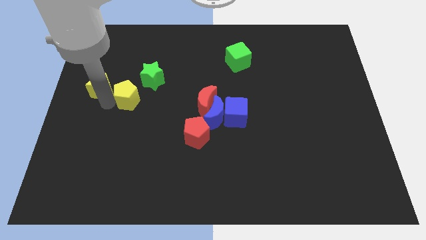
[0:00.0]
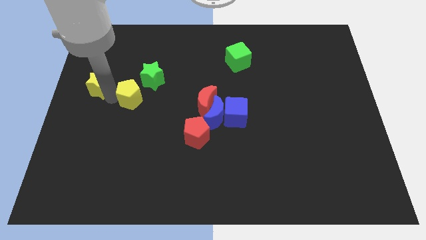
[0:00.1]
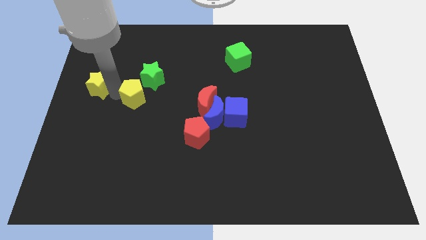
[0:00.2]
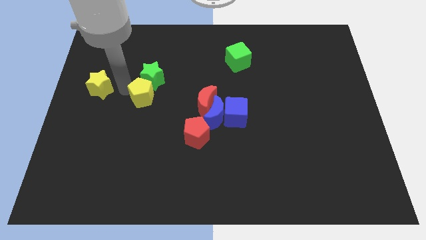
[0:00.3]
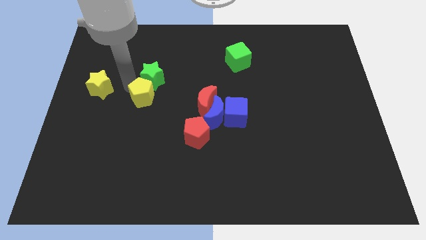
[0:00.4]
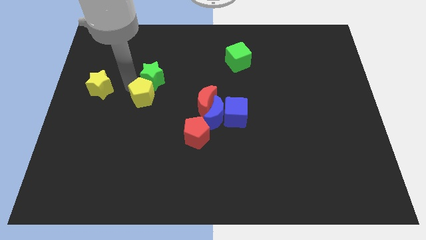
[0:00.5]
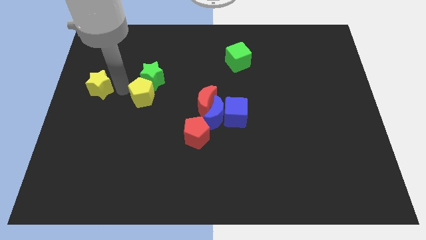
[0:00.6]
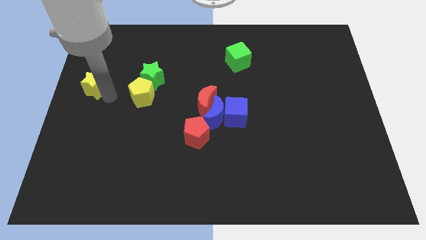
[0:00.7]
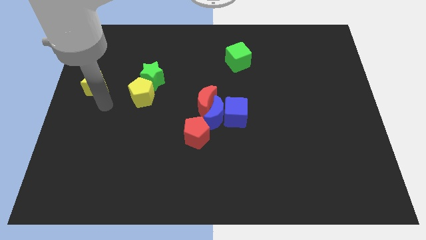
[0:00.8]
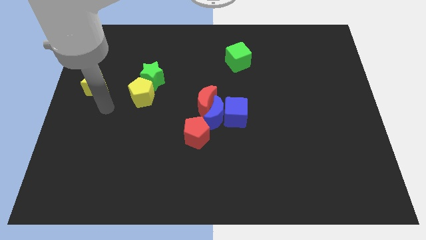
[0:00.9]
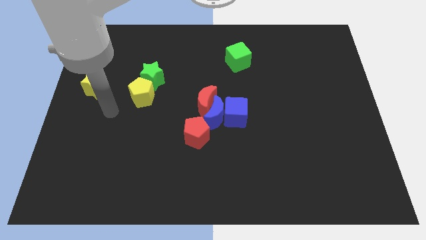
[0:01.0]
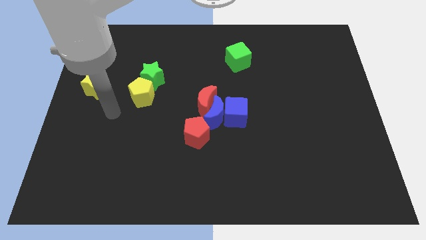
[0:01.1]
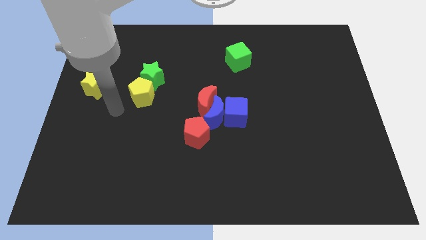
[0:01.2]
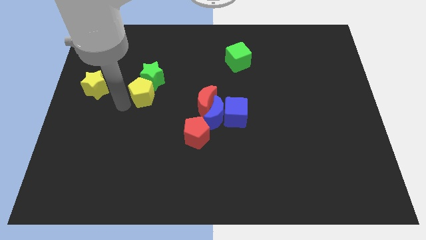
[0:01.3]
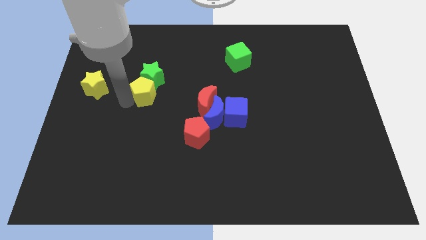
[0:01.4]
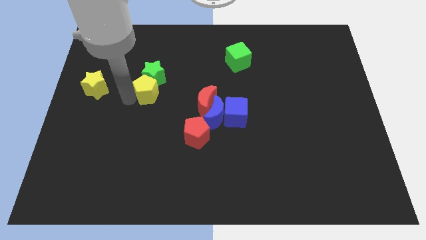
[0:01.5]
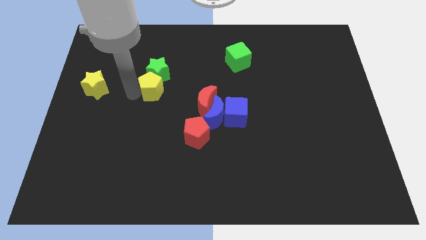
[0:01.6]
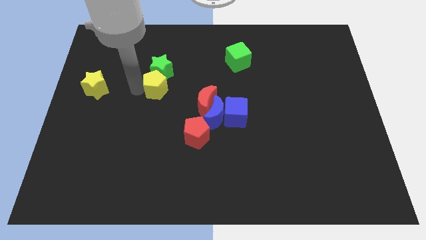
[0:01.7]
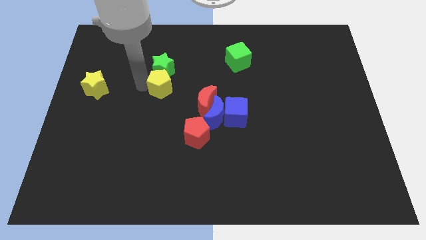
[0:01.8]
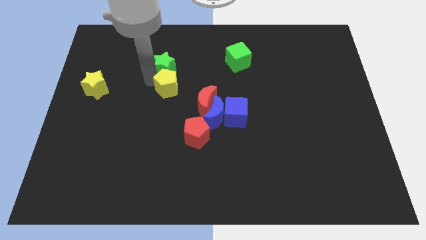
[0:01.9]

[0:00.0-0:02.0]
push the yellow pentagon into the green star

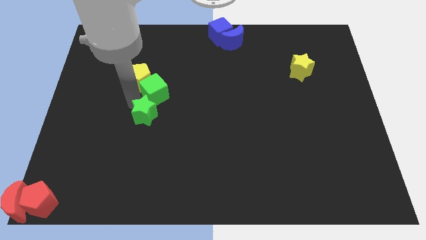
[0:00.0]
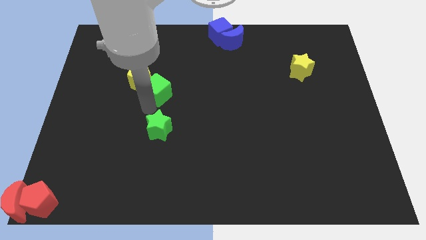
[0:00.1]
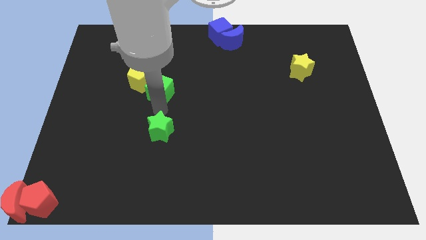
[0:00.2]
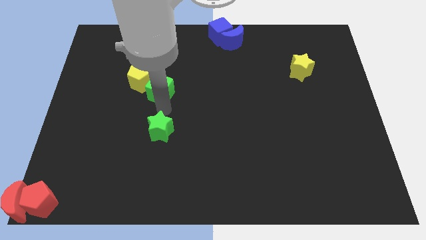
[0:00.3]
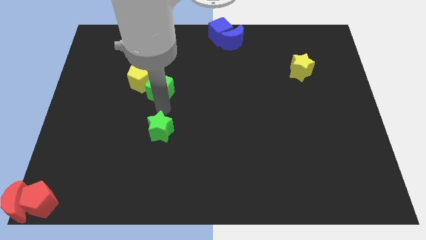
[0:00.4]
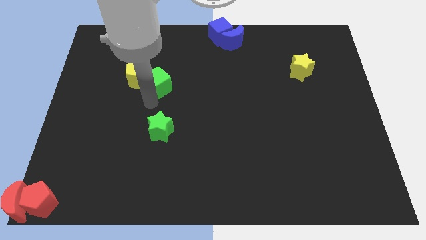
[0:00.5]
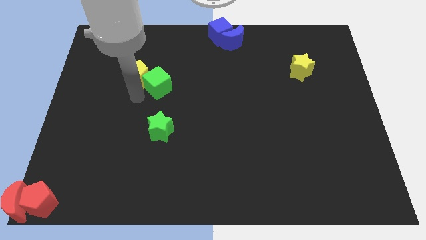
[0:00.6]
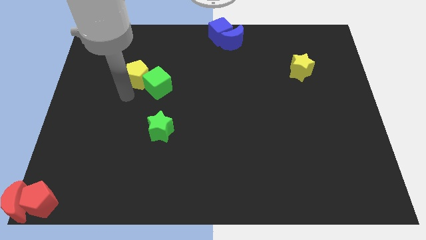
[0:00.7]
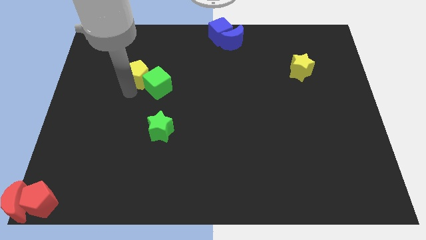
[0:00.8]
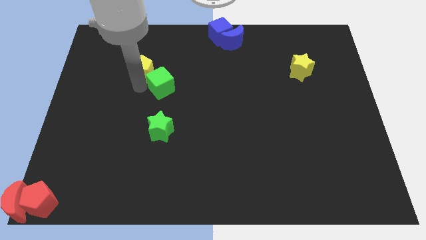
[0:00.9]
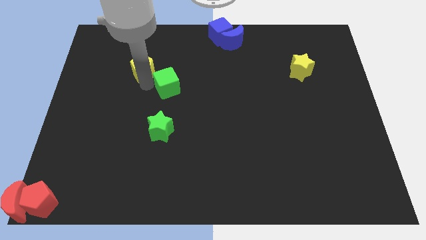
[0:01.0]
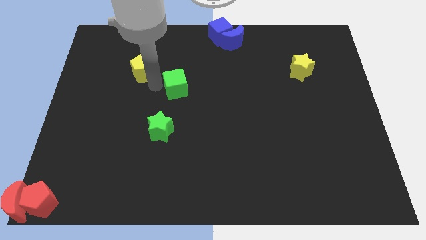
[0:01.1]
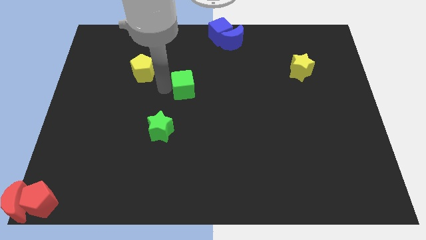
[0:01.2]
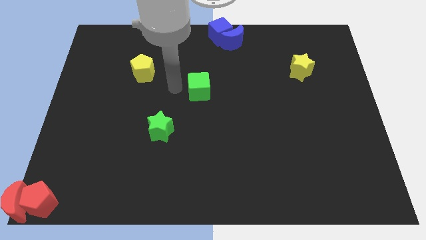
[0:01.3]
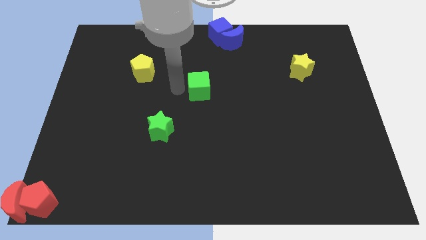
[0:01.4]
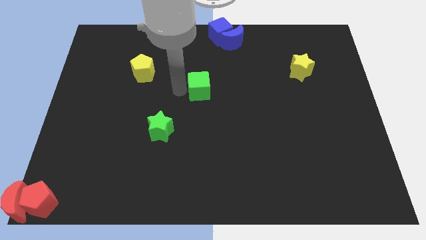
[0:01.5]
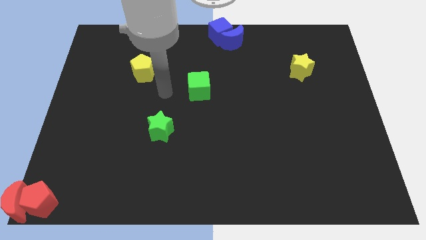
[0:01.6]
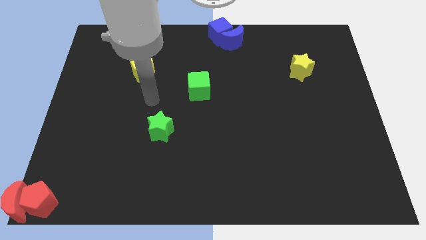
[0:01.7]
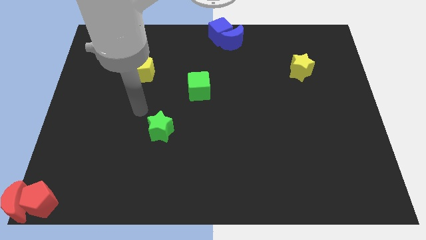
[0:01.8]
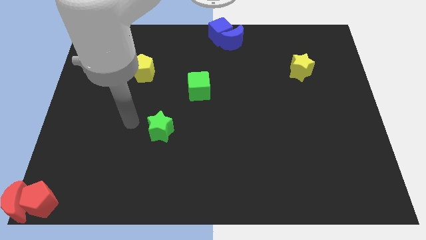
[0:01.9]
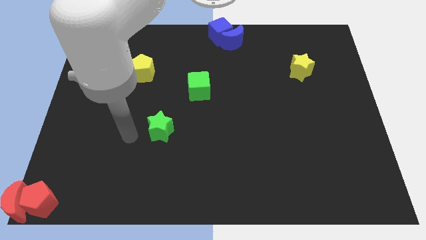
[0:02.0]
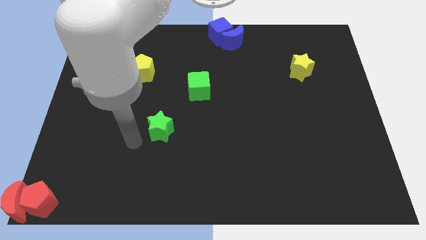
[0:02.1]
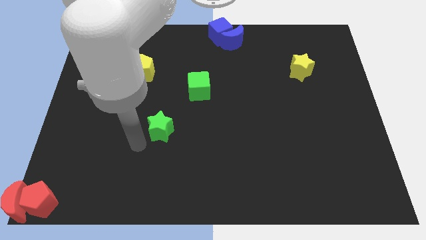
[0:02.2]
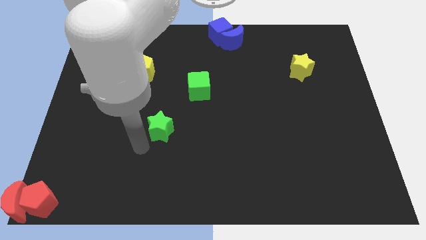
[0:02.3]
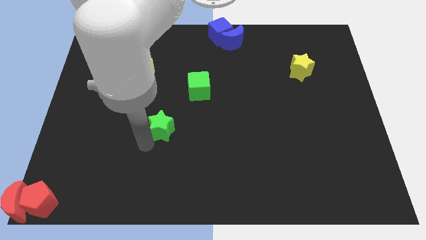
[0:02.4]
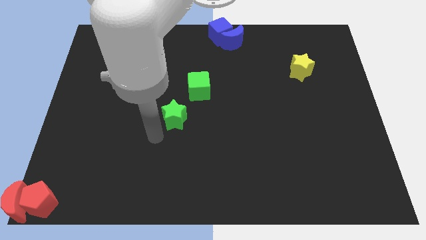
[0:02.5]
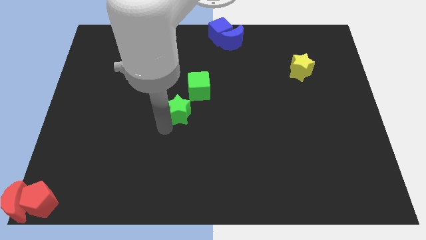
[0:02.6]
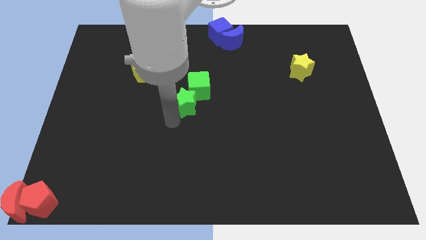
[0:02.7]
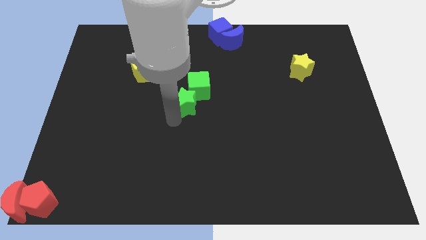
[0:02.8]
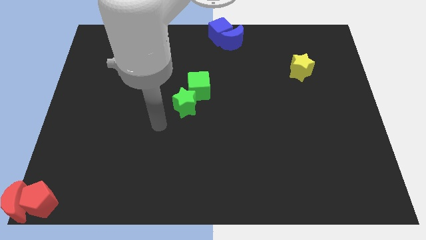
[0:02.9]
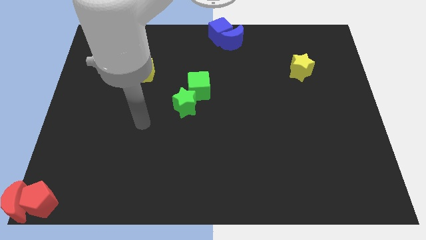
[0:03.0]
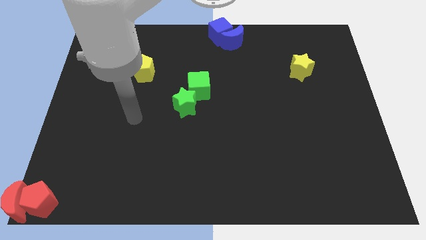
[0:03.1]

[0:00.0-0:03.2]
push the green blocks away from the yellow pentagon

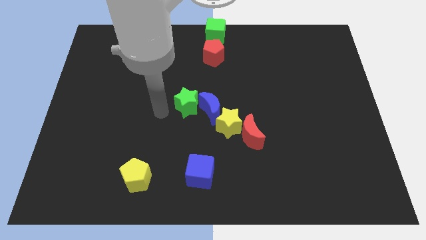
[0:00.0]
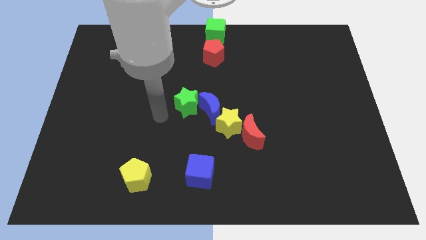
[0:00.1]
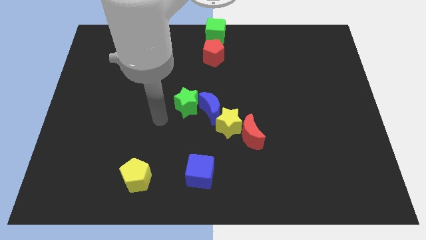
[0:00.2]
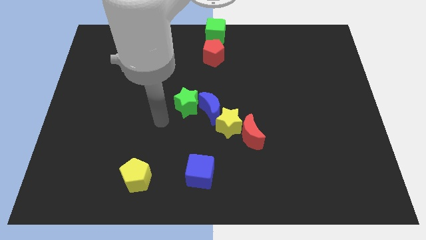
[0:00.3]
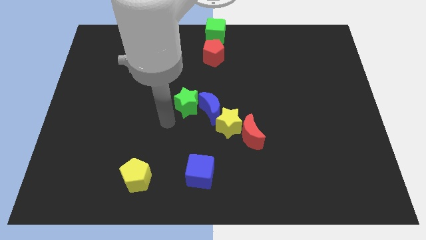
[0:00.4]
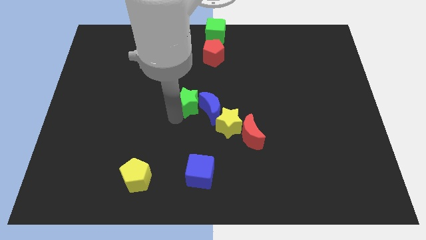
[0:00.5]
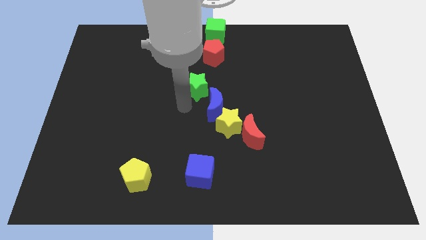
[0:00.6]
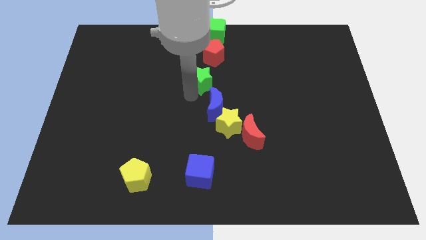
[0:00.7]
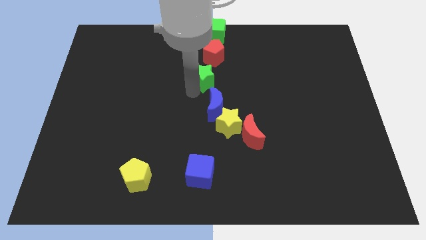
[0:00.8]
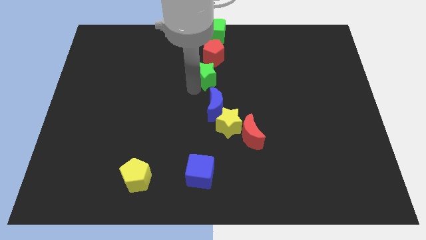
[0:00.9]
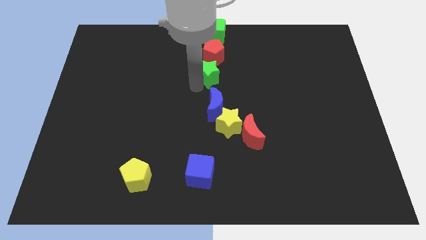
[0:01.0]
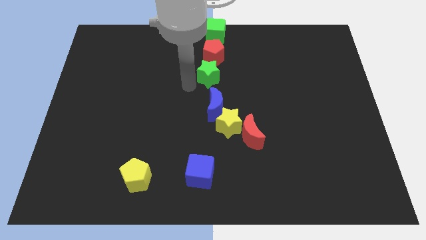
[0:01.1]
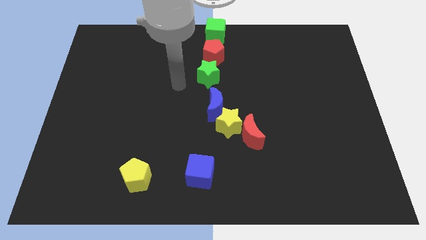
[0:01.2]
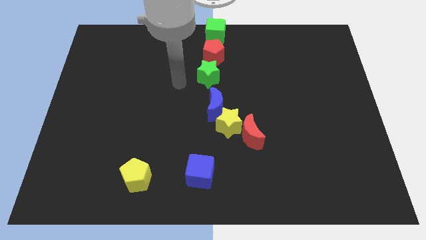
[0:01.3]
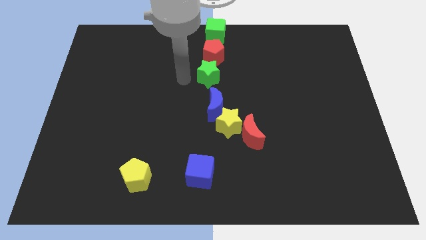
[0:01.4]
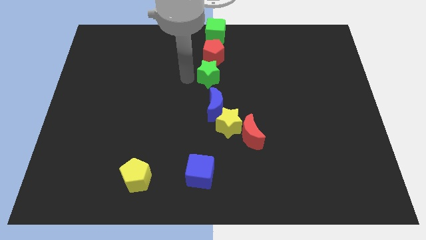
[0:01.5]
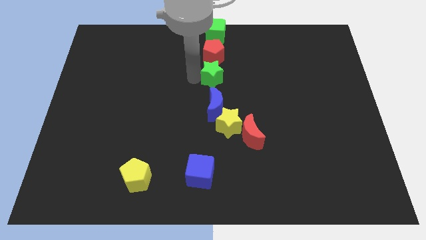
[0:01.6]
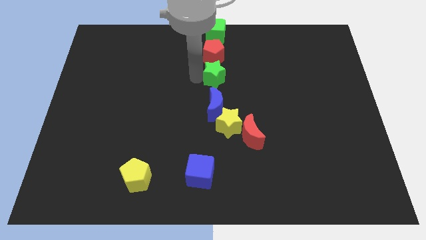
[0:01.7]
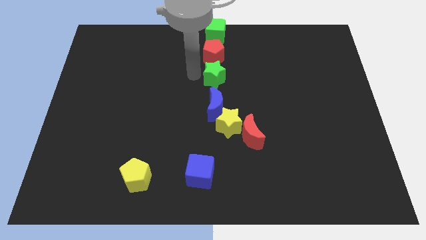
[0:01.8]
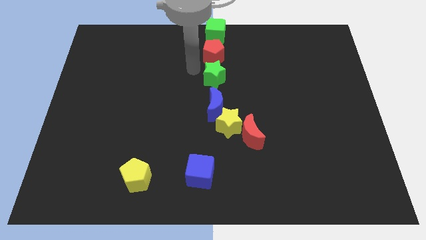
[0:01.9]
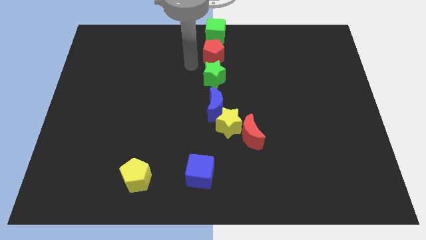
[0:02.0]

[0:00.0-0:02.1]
slide green star above the blue moon

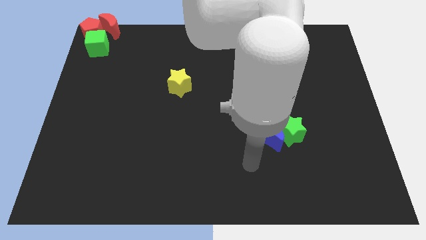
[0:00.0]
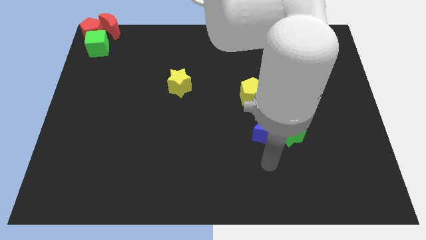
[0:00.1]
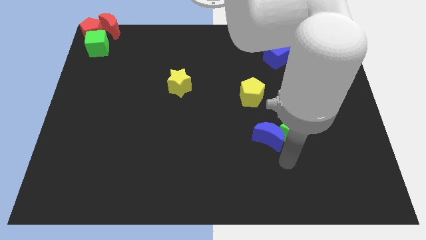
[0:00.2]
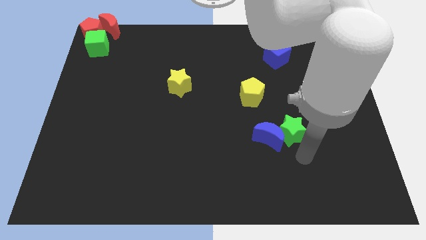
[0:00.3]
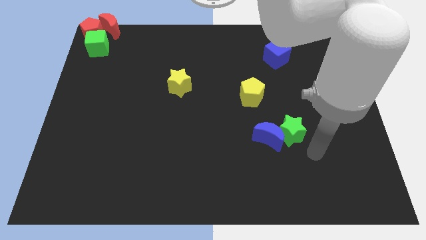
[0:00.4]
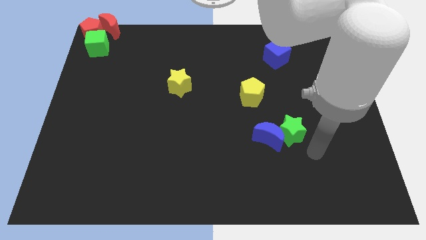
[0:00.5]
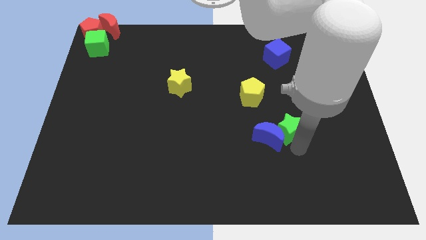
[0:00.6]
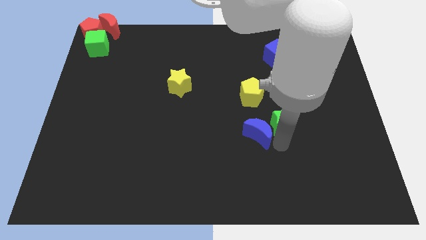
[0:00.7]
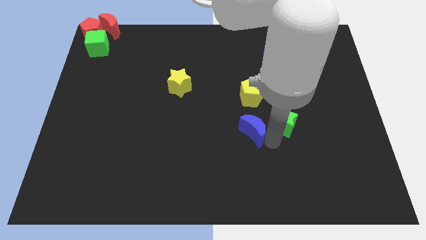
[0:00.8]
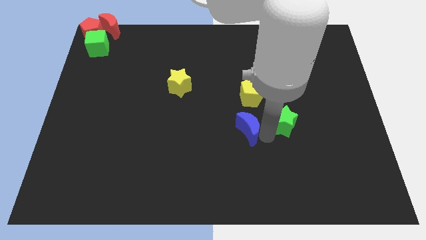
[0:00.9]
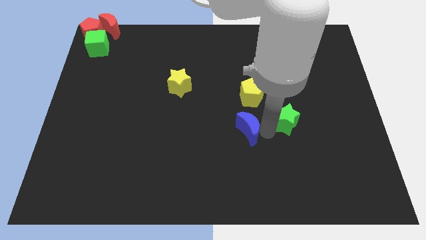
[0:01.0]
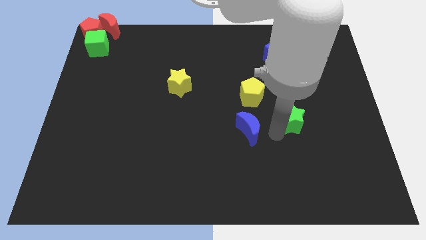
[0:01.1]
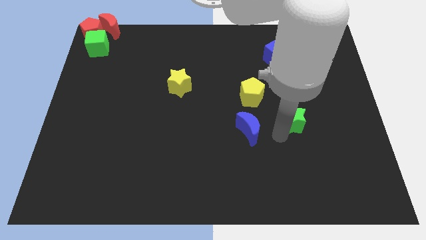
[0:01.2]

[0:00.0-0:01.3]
separate the blue moon and green star

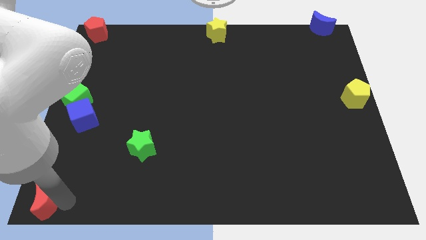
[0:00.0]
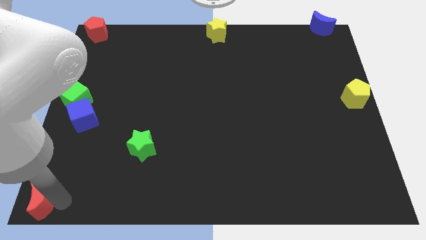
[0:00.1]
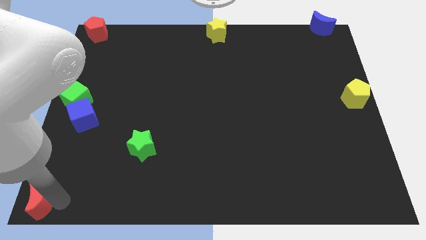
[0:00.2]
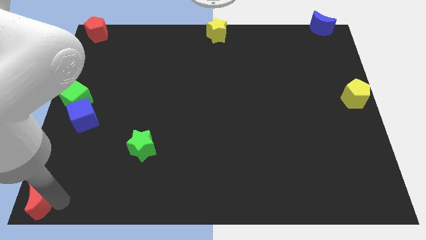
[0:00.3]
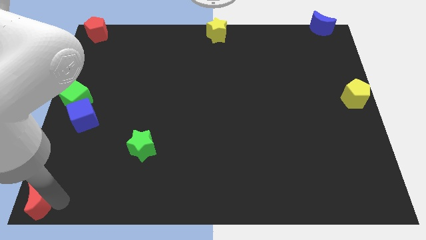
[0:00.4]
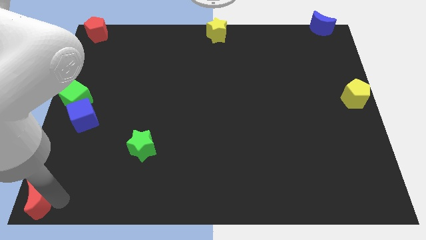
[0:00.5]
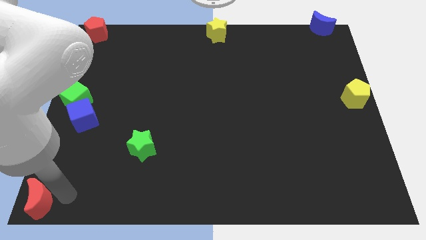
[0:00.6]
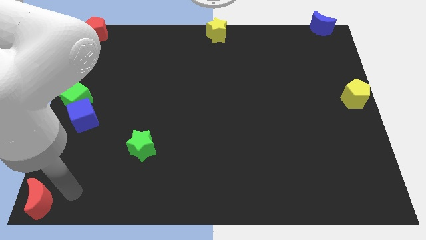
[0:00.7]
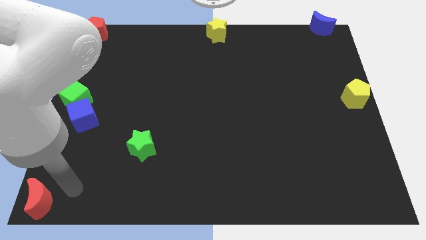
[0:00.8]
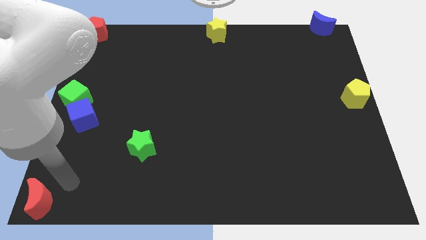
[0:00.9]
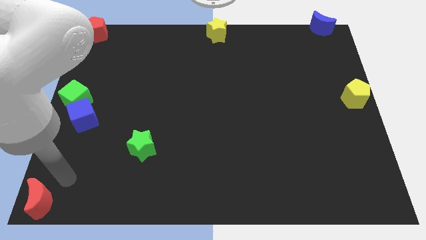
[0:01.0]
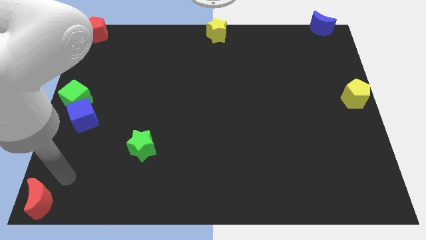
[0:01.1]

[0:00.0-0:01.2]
drag the red moon to the bottom left corner of the board
